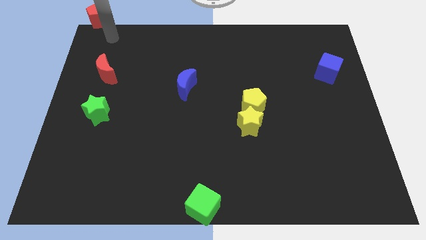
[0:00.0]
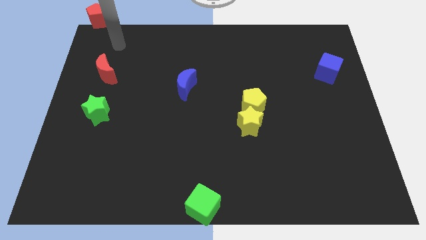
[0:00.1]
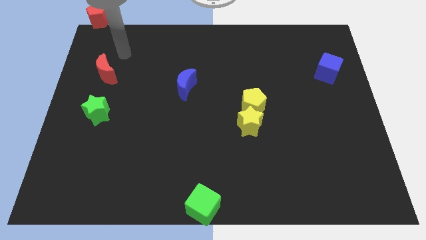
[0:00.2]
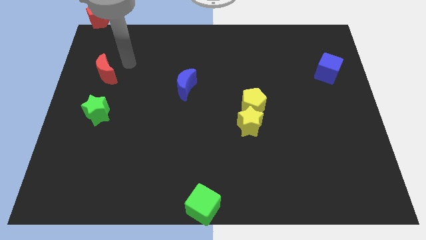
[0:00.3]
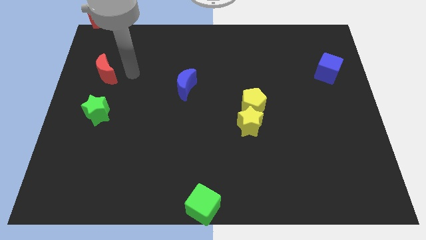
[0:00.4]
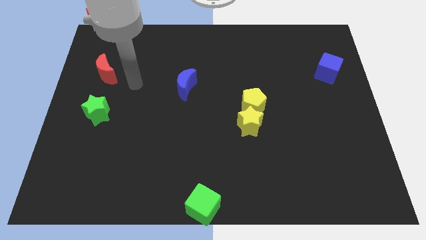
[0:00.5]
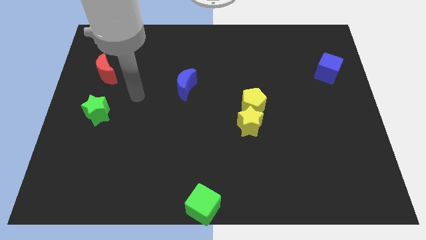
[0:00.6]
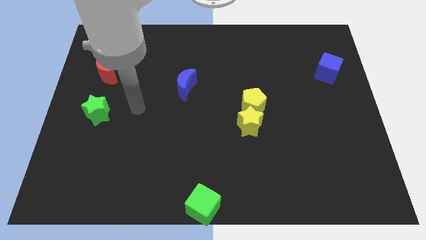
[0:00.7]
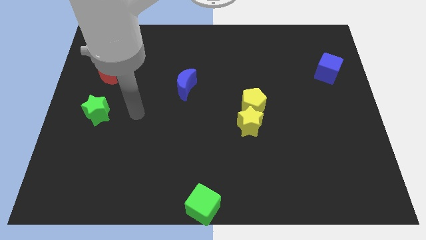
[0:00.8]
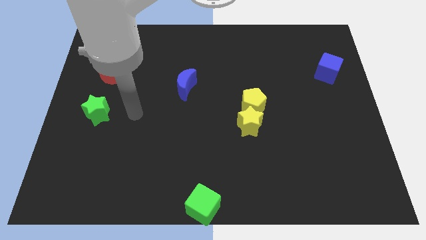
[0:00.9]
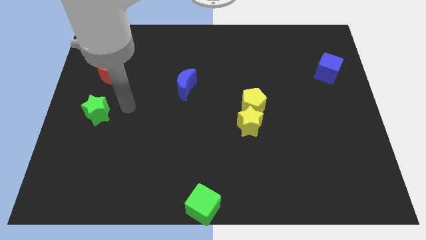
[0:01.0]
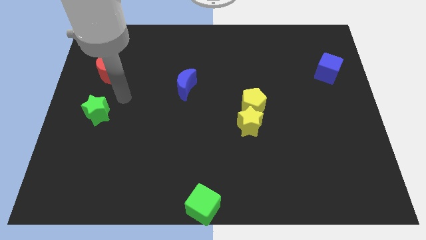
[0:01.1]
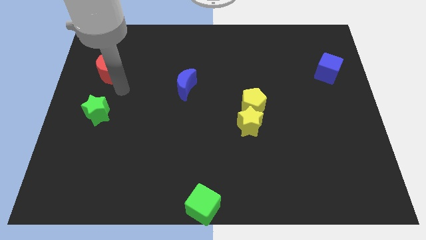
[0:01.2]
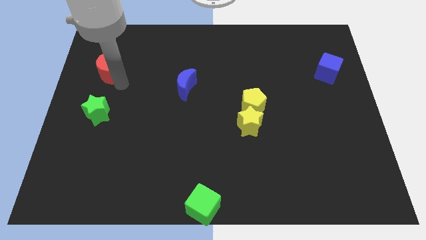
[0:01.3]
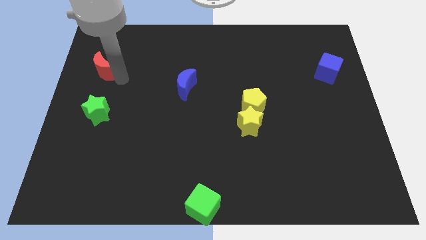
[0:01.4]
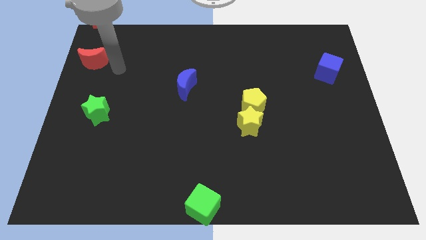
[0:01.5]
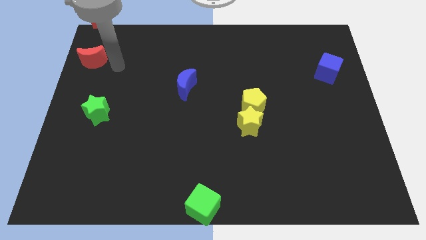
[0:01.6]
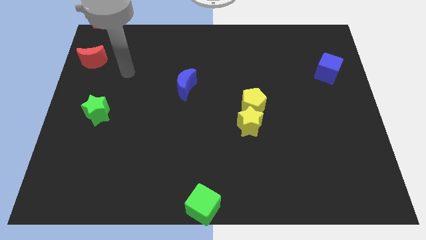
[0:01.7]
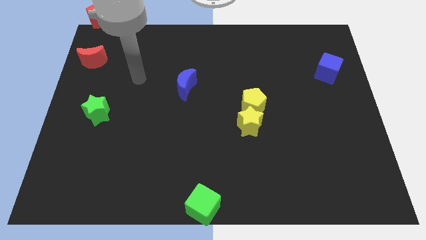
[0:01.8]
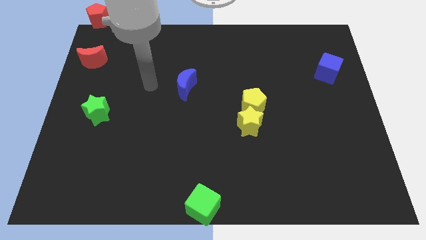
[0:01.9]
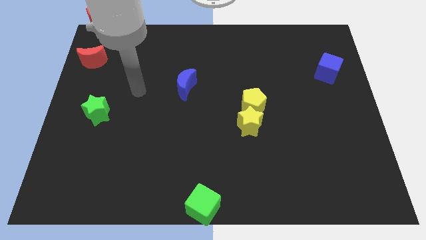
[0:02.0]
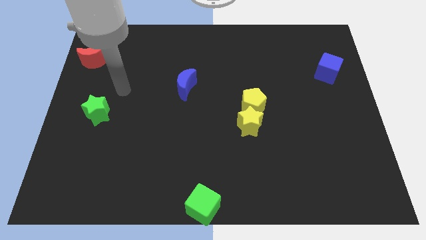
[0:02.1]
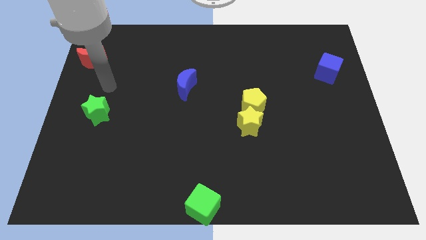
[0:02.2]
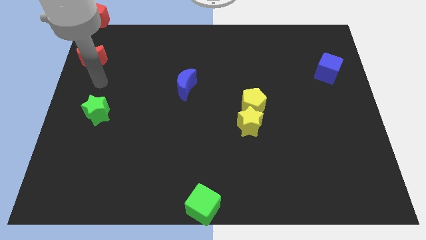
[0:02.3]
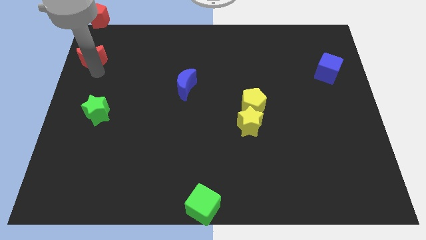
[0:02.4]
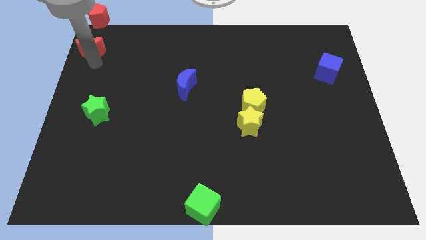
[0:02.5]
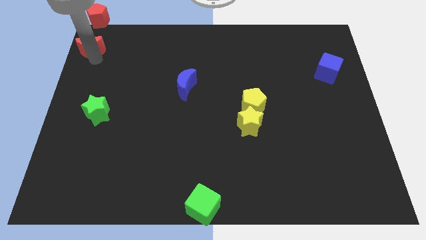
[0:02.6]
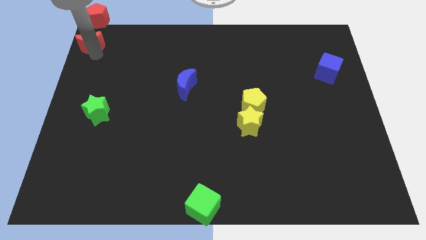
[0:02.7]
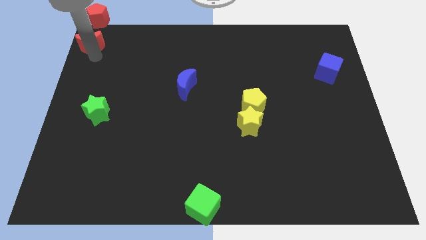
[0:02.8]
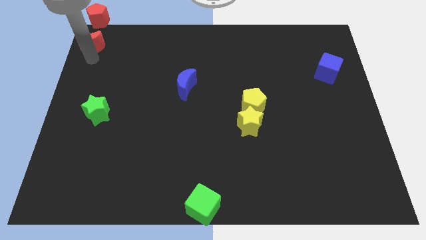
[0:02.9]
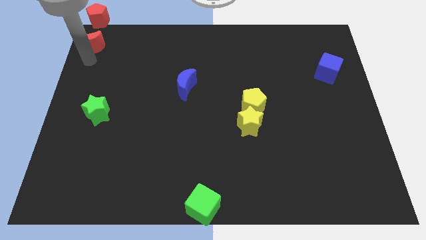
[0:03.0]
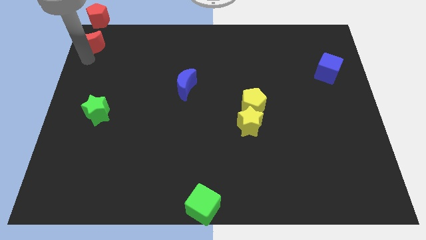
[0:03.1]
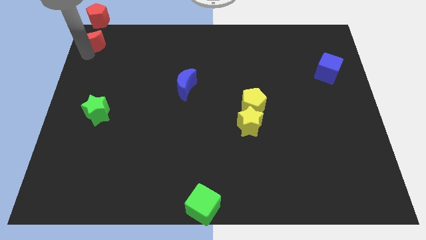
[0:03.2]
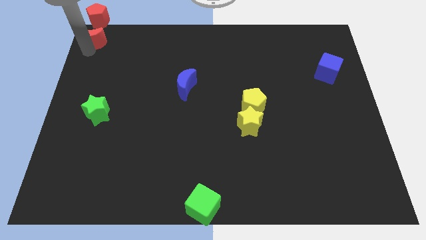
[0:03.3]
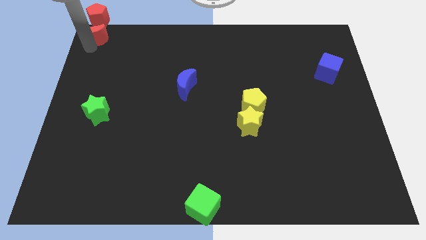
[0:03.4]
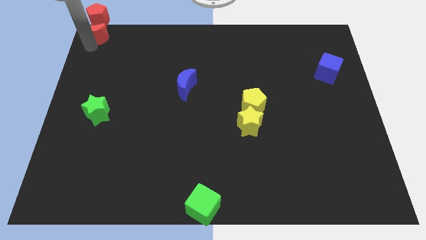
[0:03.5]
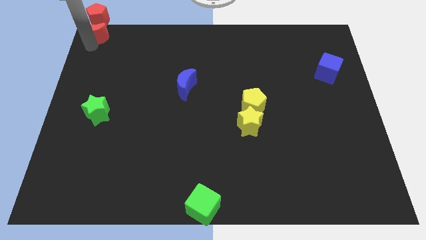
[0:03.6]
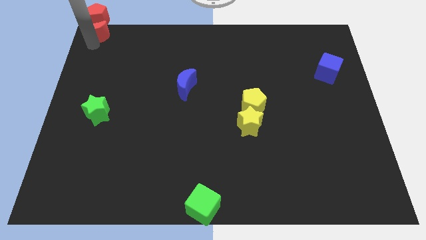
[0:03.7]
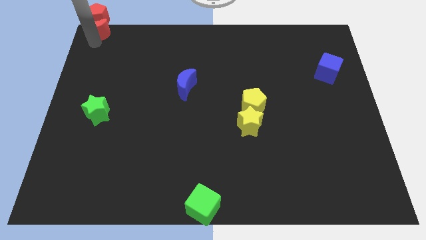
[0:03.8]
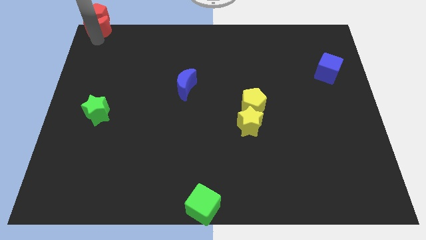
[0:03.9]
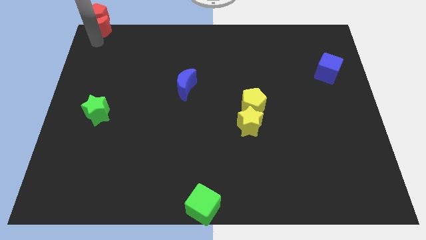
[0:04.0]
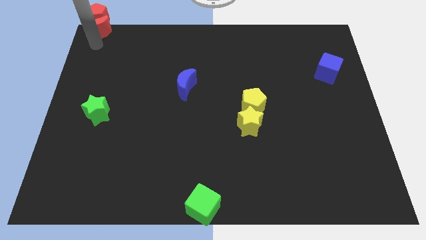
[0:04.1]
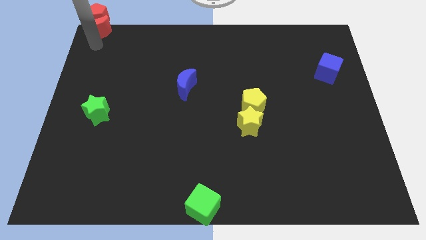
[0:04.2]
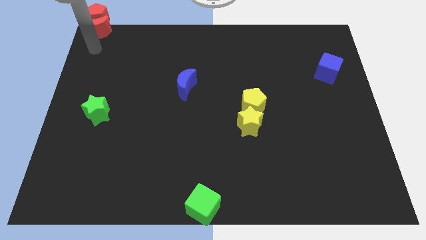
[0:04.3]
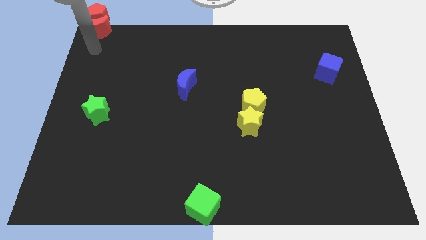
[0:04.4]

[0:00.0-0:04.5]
place the red moon below into the red pentagon at the top left corner

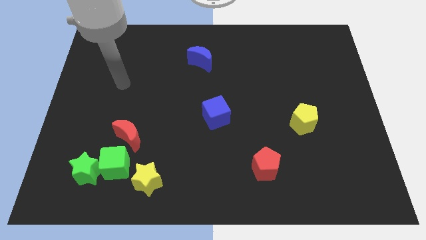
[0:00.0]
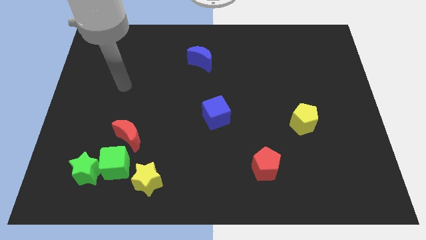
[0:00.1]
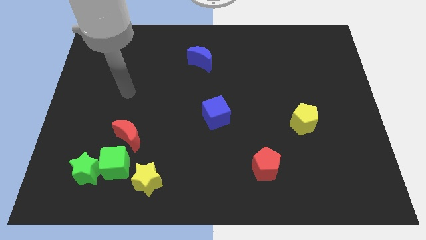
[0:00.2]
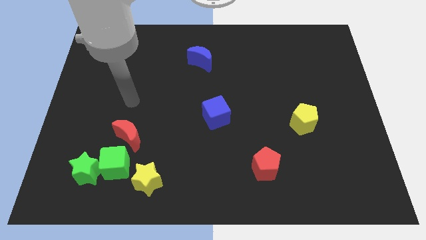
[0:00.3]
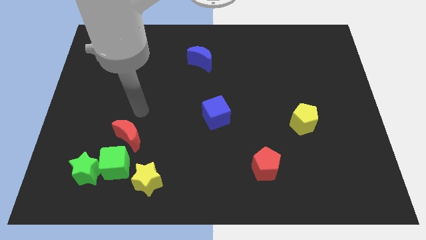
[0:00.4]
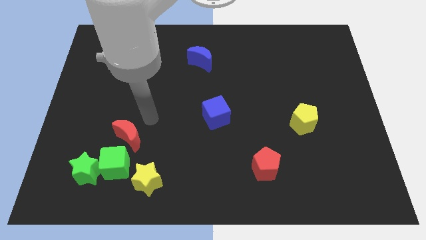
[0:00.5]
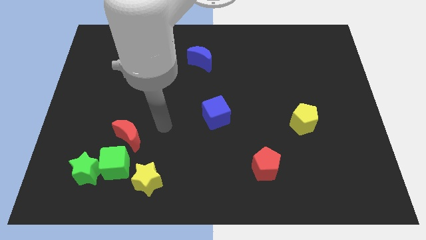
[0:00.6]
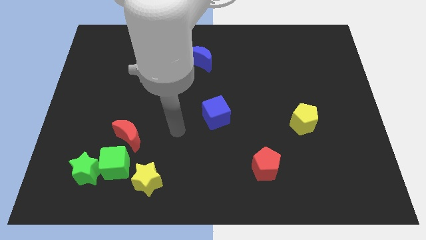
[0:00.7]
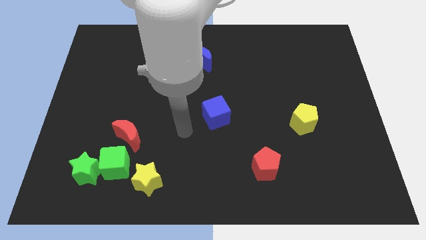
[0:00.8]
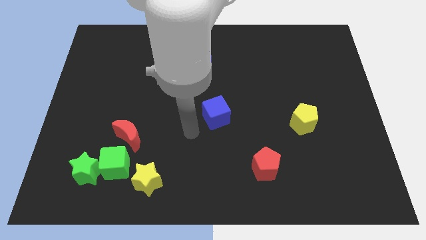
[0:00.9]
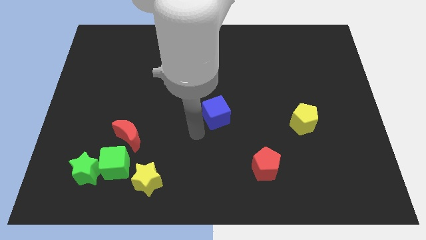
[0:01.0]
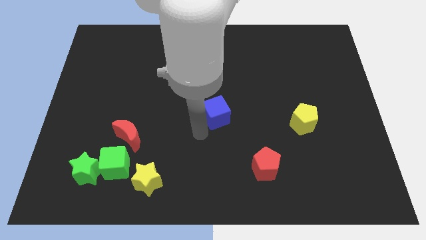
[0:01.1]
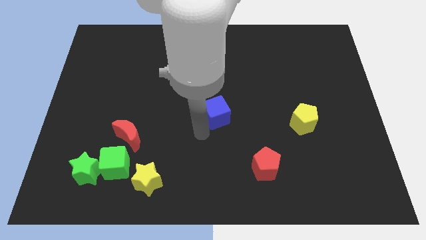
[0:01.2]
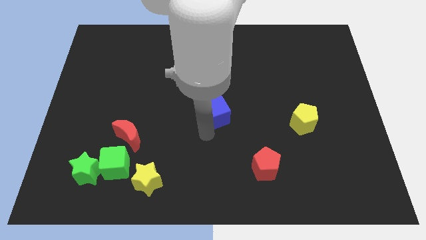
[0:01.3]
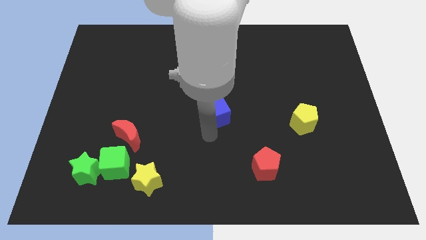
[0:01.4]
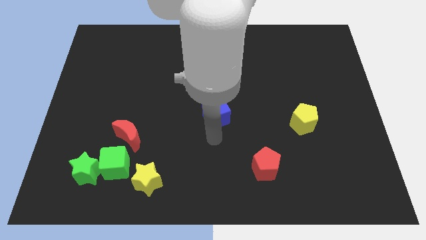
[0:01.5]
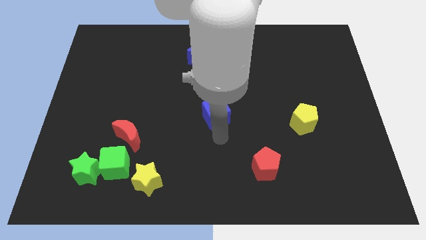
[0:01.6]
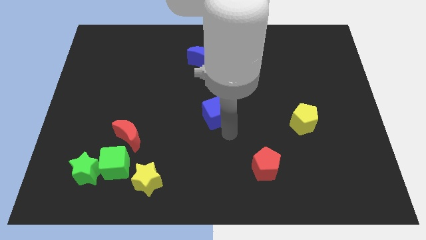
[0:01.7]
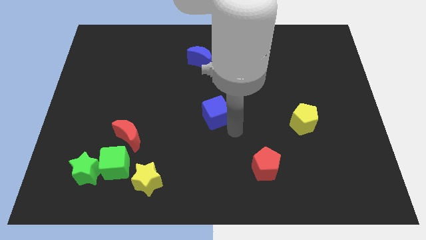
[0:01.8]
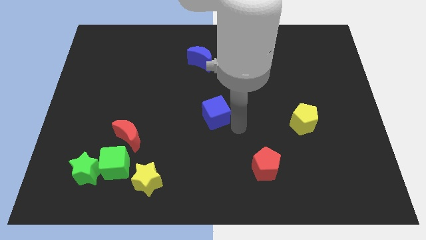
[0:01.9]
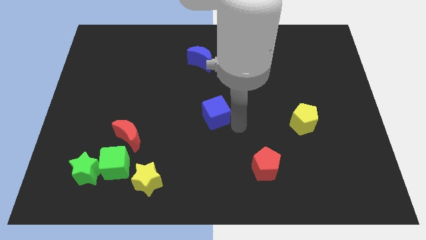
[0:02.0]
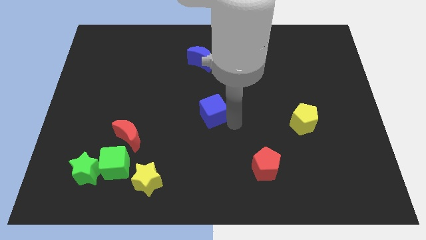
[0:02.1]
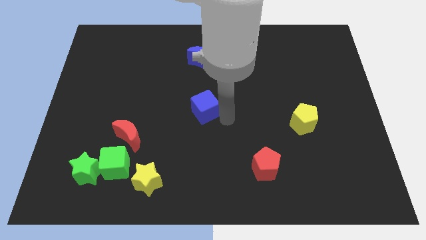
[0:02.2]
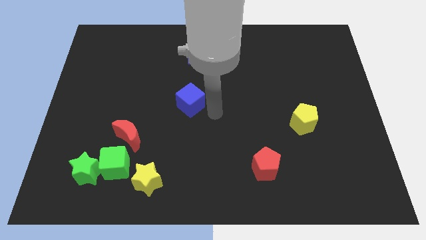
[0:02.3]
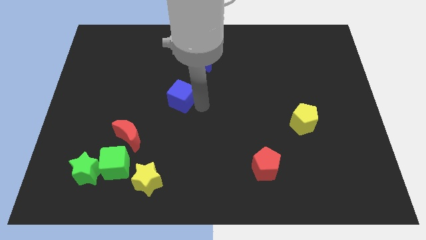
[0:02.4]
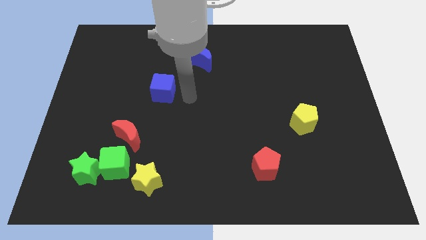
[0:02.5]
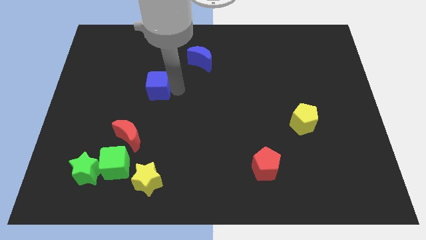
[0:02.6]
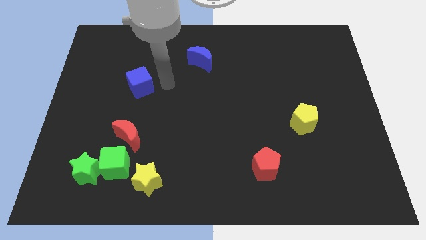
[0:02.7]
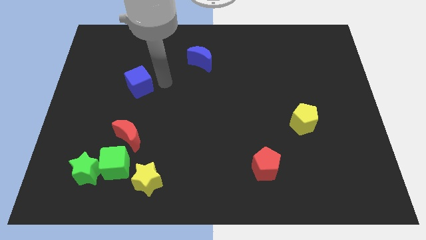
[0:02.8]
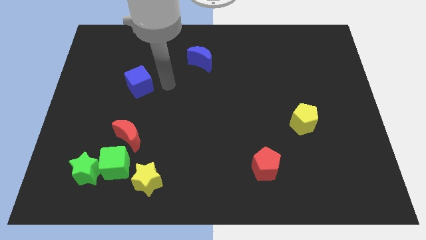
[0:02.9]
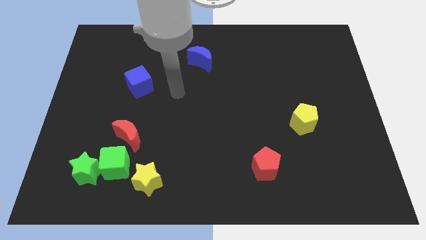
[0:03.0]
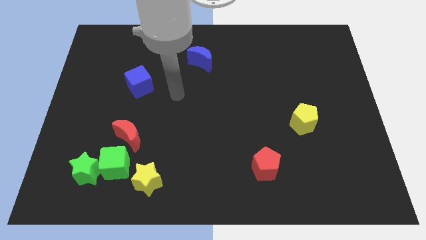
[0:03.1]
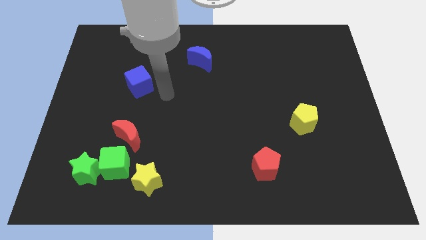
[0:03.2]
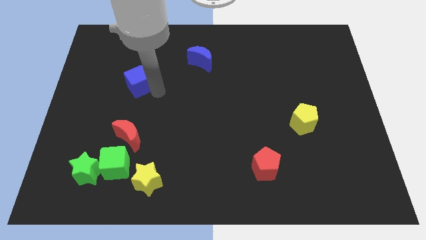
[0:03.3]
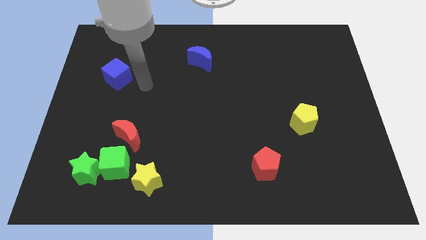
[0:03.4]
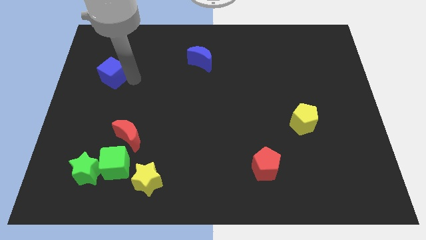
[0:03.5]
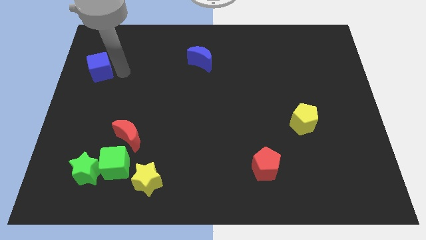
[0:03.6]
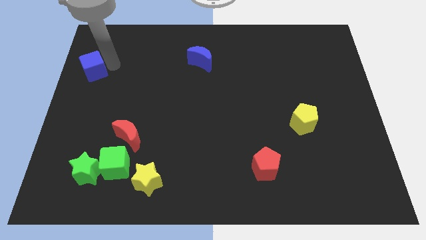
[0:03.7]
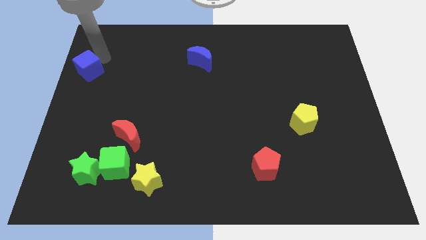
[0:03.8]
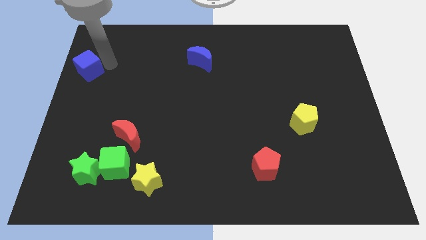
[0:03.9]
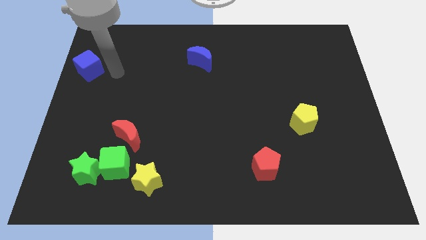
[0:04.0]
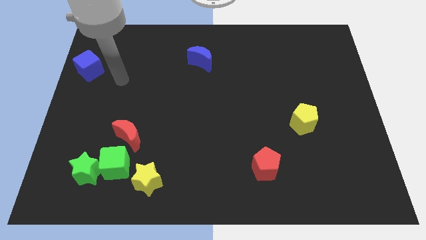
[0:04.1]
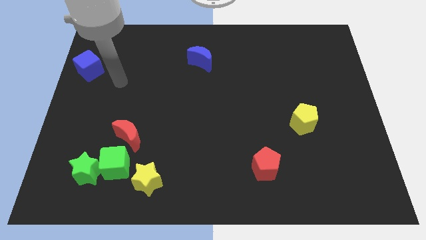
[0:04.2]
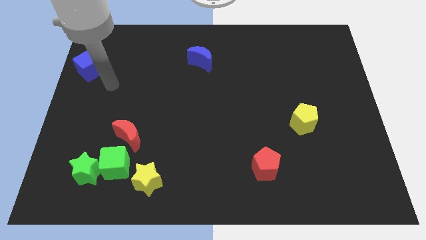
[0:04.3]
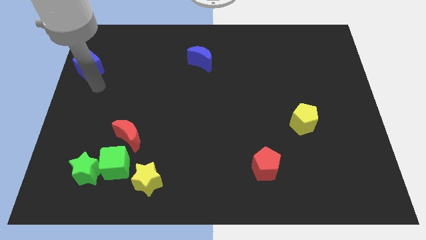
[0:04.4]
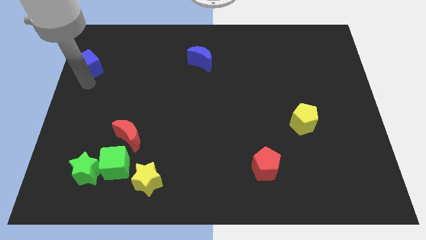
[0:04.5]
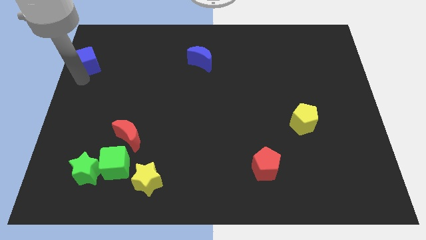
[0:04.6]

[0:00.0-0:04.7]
push the blue cube to the top left
